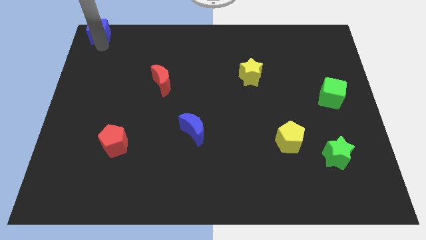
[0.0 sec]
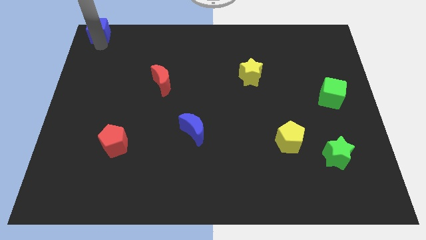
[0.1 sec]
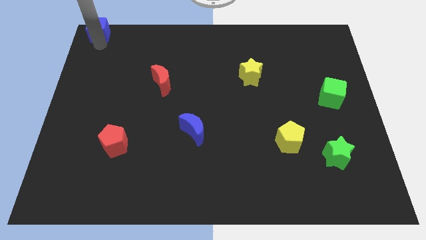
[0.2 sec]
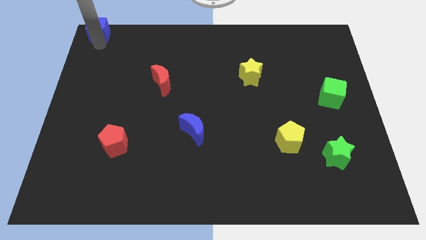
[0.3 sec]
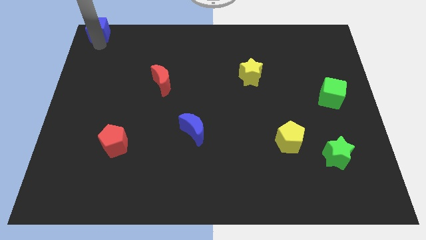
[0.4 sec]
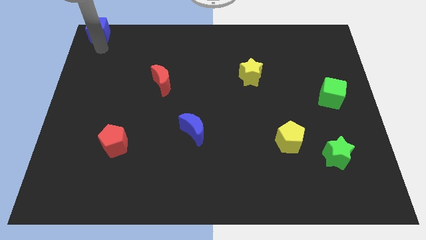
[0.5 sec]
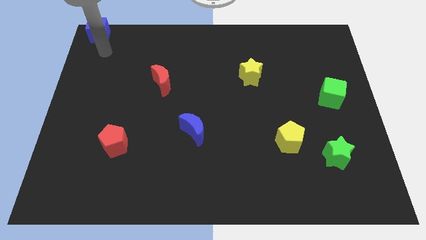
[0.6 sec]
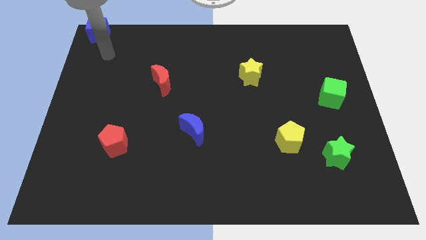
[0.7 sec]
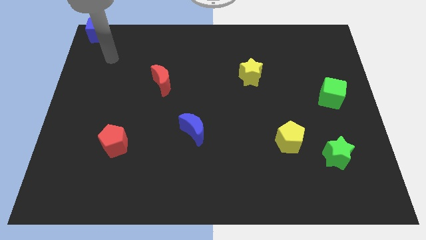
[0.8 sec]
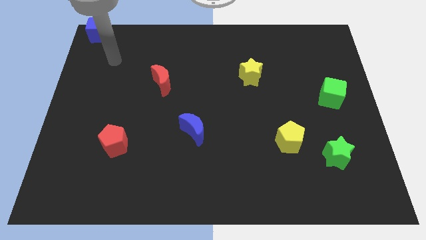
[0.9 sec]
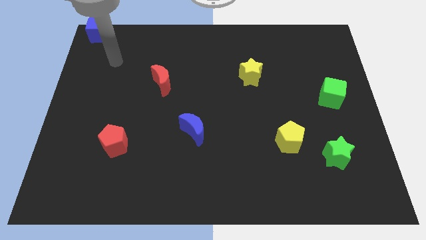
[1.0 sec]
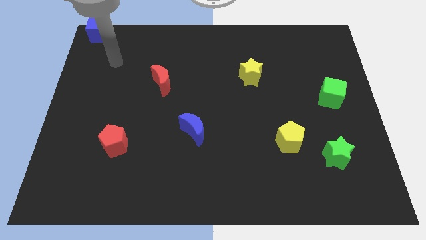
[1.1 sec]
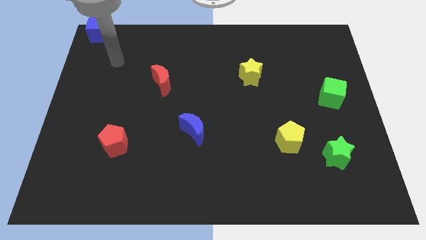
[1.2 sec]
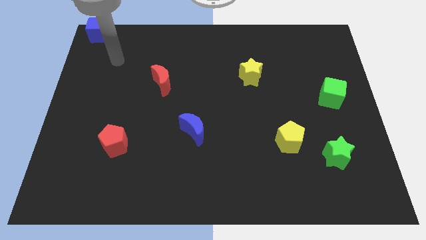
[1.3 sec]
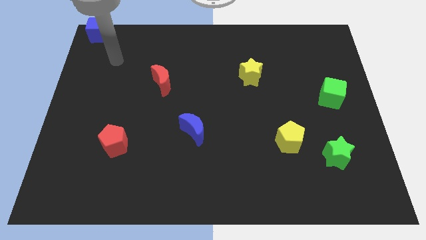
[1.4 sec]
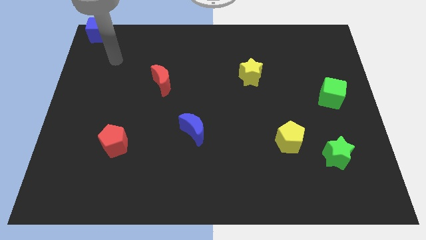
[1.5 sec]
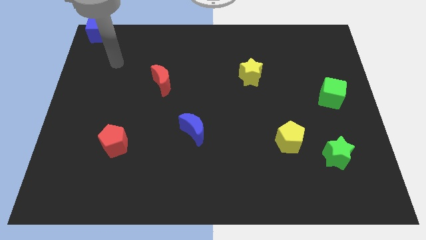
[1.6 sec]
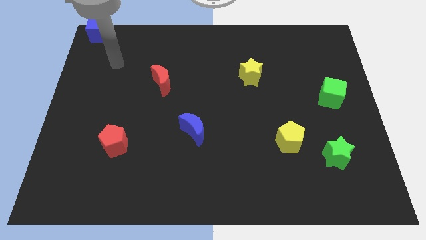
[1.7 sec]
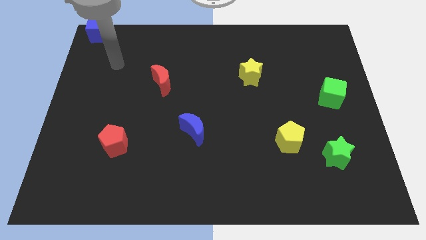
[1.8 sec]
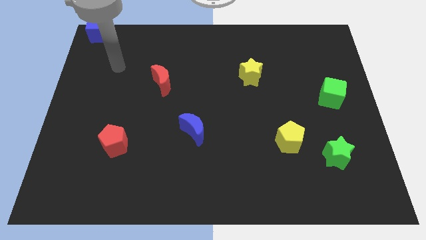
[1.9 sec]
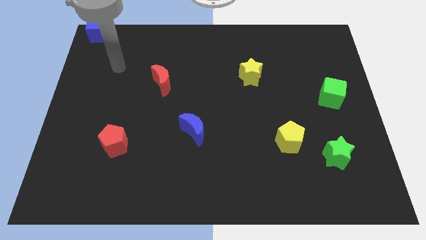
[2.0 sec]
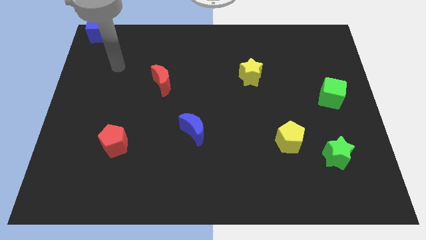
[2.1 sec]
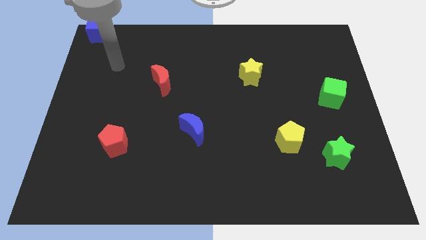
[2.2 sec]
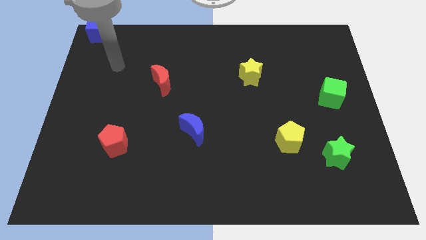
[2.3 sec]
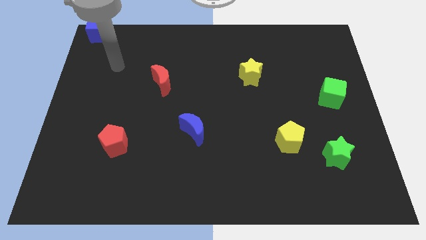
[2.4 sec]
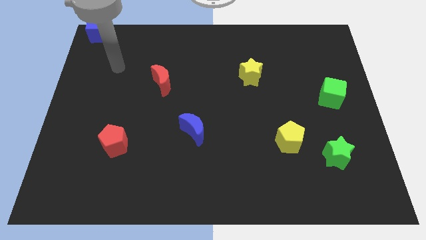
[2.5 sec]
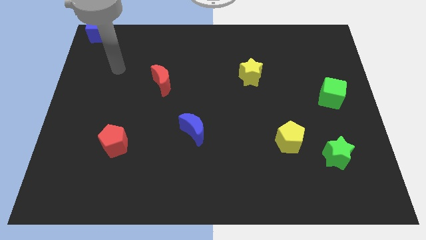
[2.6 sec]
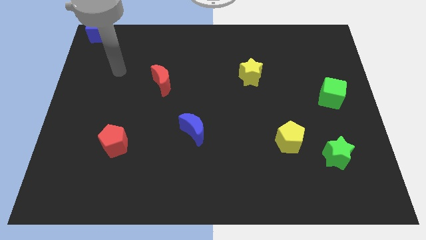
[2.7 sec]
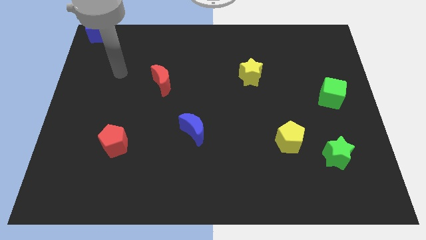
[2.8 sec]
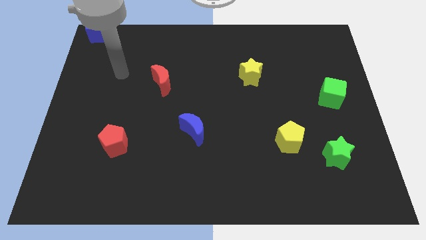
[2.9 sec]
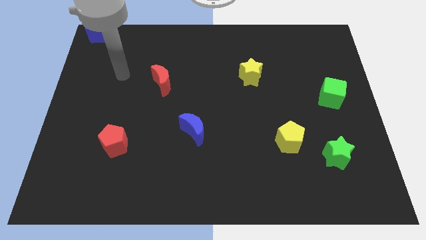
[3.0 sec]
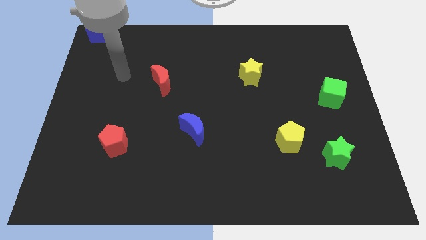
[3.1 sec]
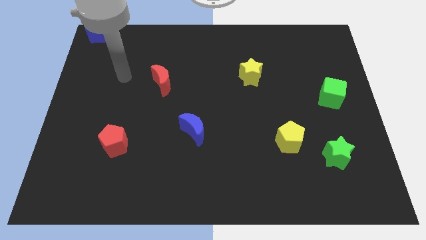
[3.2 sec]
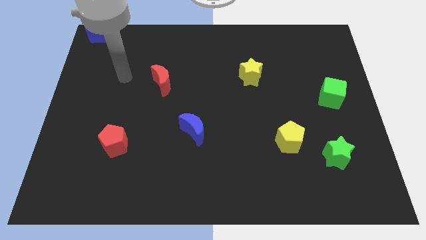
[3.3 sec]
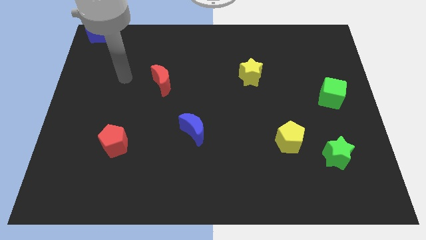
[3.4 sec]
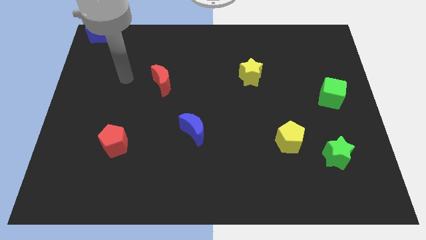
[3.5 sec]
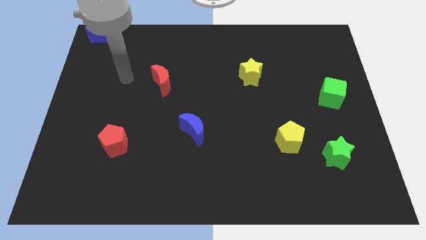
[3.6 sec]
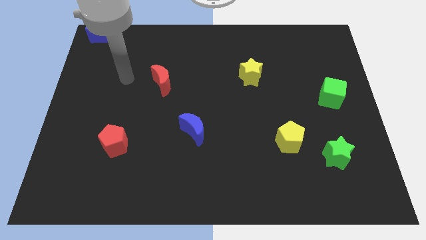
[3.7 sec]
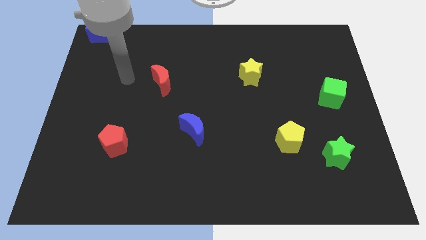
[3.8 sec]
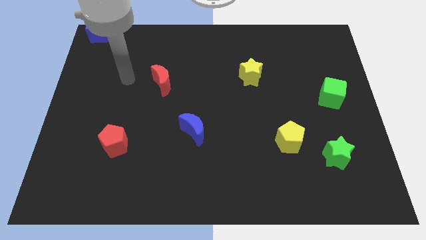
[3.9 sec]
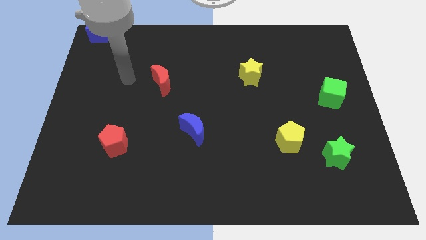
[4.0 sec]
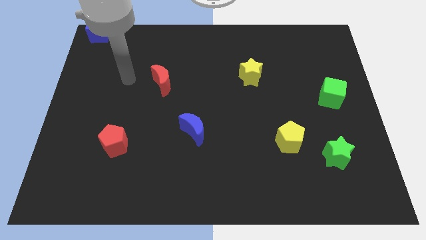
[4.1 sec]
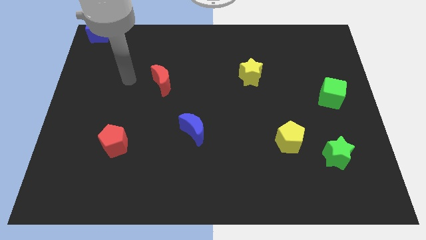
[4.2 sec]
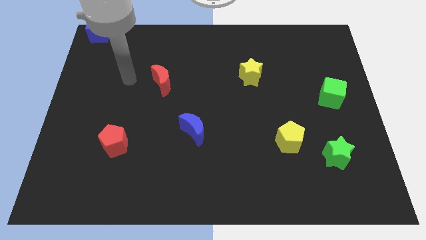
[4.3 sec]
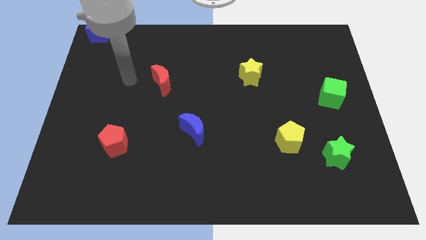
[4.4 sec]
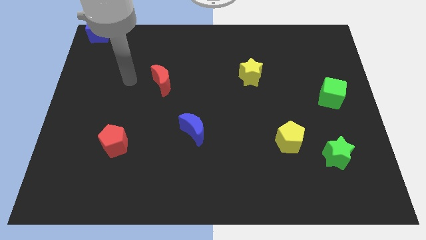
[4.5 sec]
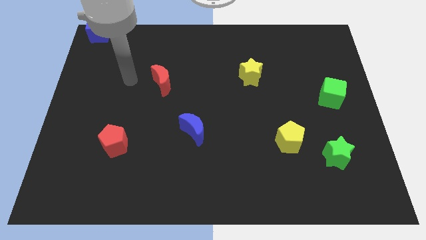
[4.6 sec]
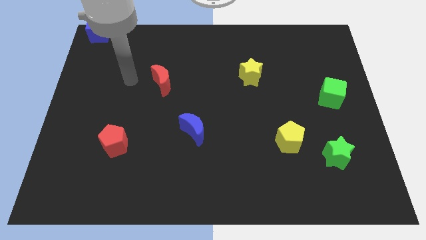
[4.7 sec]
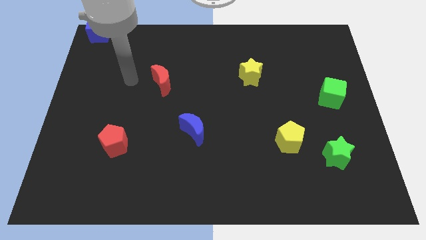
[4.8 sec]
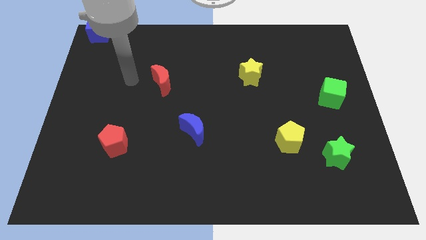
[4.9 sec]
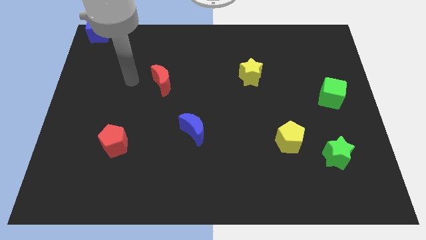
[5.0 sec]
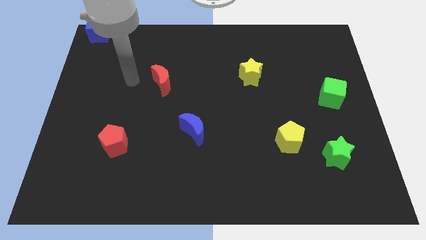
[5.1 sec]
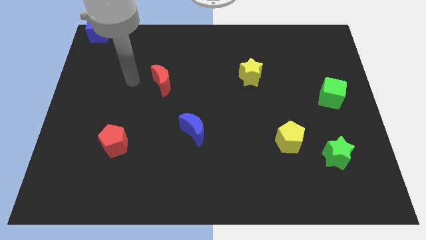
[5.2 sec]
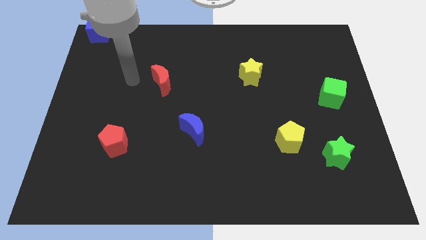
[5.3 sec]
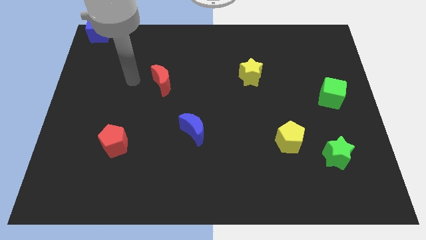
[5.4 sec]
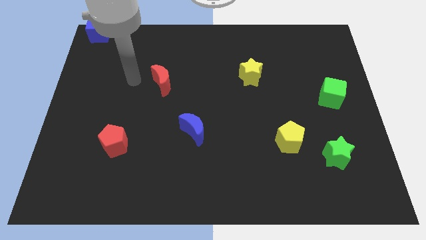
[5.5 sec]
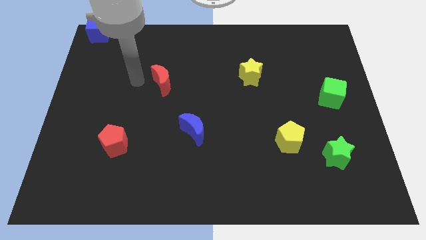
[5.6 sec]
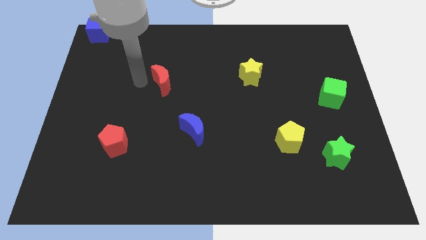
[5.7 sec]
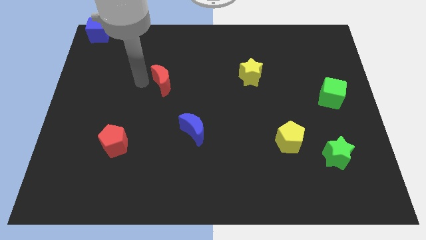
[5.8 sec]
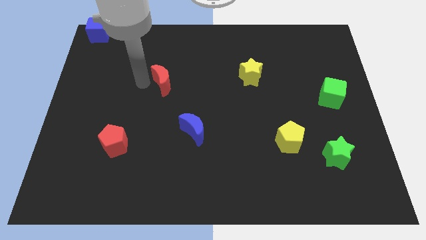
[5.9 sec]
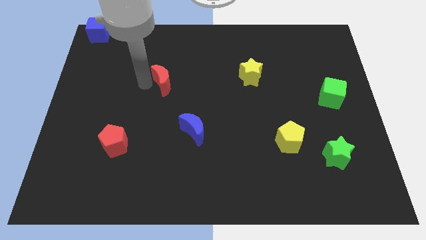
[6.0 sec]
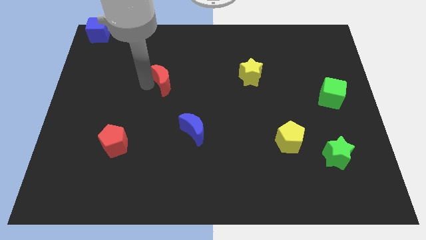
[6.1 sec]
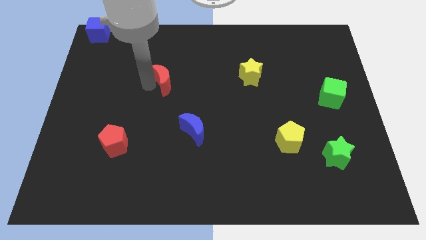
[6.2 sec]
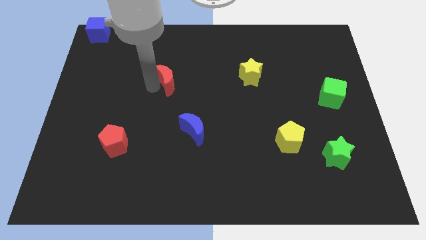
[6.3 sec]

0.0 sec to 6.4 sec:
move the arm towards the red crescent

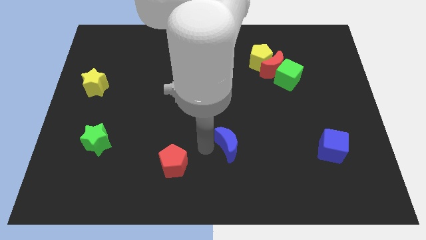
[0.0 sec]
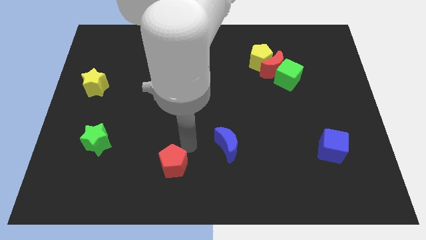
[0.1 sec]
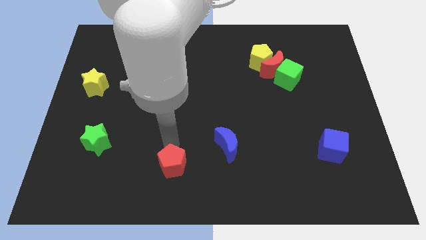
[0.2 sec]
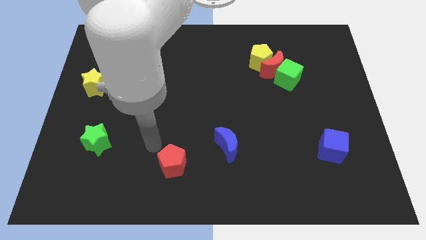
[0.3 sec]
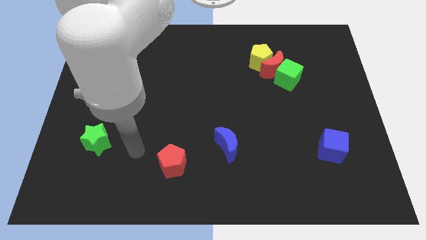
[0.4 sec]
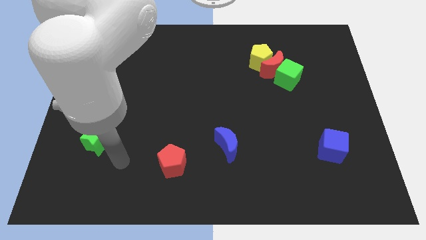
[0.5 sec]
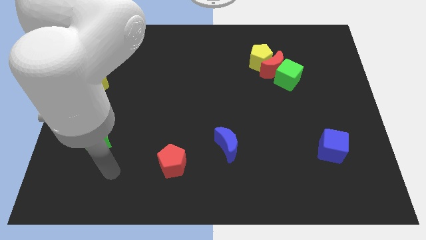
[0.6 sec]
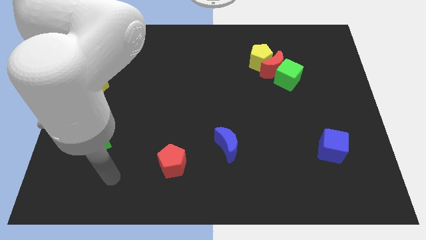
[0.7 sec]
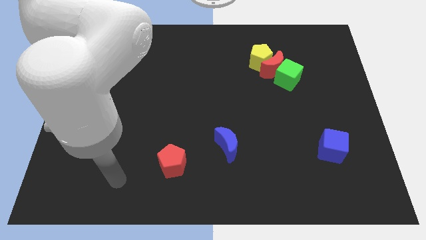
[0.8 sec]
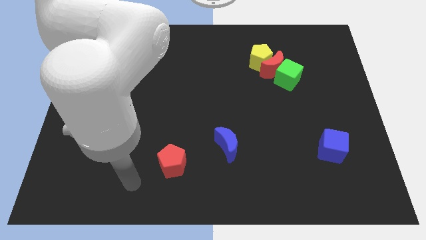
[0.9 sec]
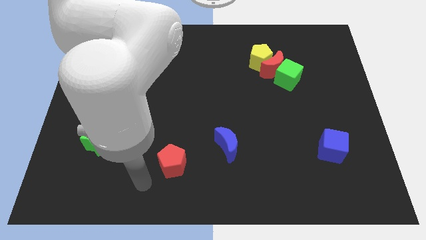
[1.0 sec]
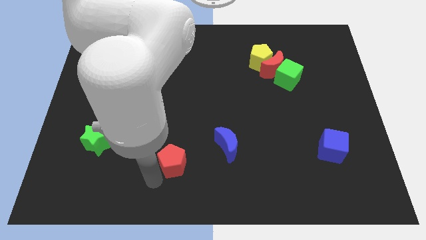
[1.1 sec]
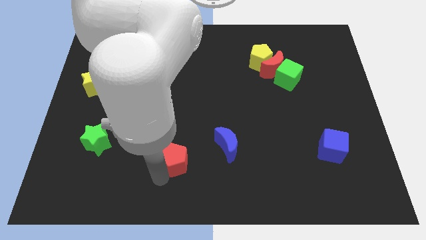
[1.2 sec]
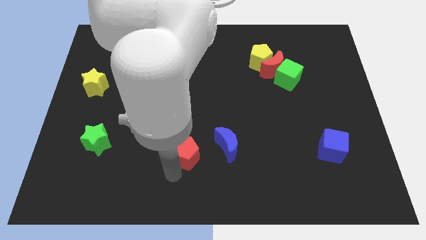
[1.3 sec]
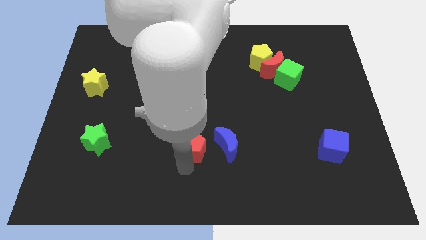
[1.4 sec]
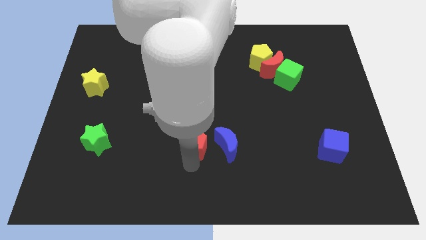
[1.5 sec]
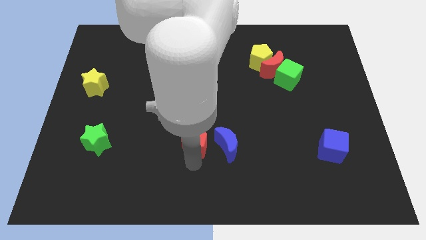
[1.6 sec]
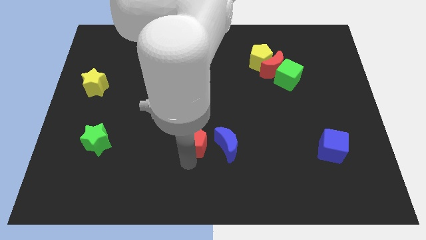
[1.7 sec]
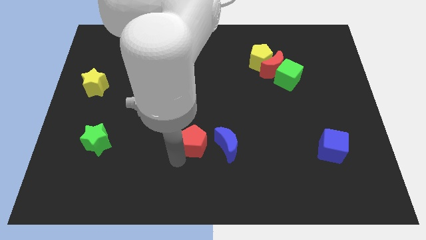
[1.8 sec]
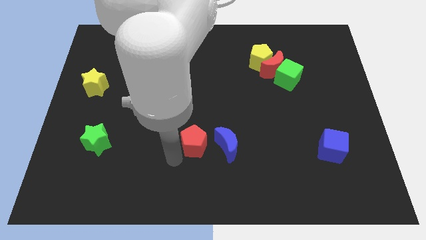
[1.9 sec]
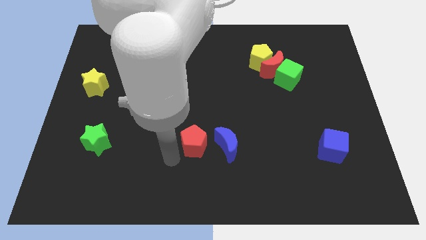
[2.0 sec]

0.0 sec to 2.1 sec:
place the red pentagon to the left of blue moon

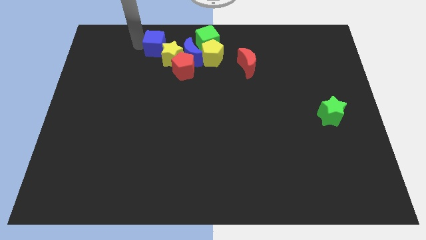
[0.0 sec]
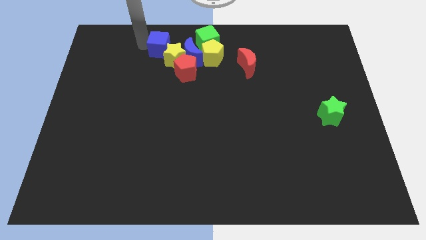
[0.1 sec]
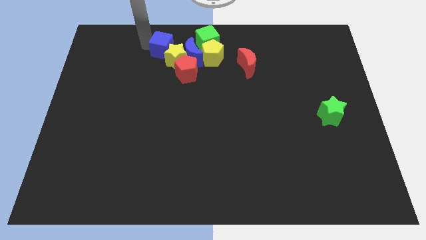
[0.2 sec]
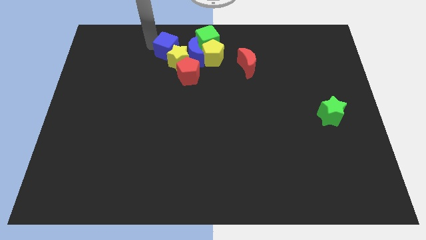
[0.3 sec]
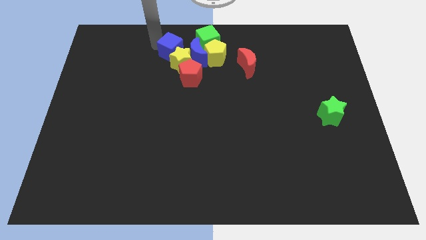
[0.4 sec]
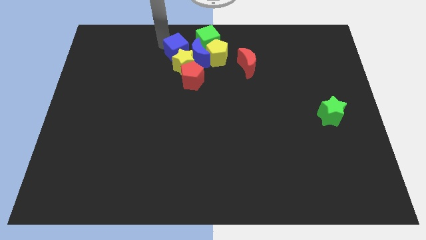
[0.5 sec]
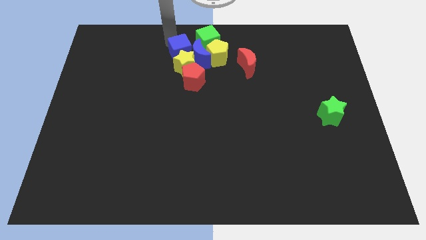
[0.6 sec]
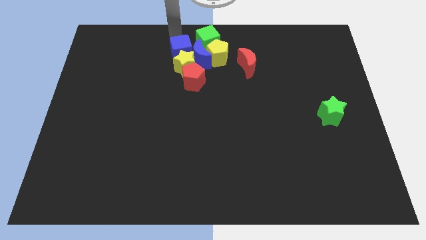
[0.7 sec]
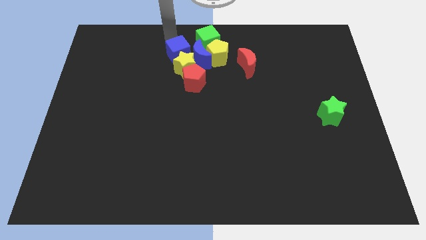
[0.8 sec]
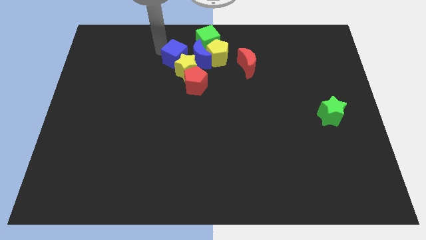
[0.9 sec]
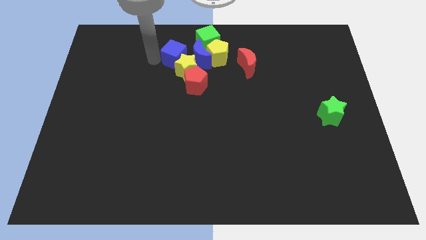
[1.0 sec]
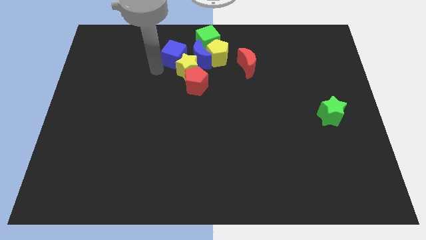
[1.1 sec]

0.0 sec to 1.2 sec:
slide the blue cube into the yellow star
